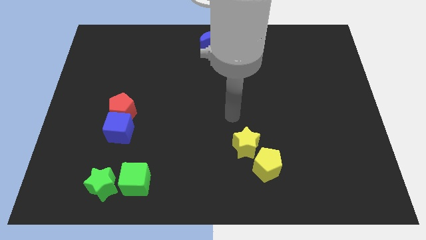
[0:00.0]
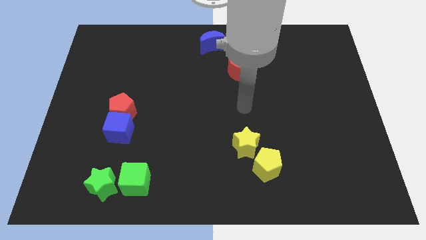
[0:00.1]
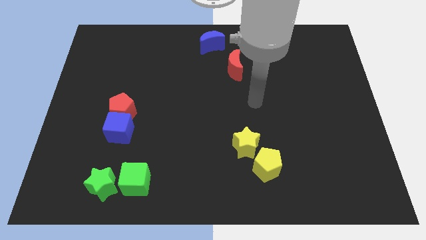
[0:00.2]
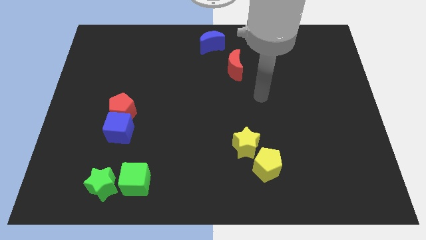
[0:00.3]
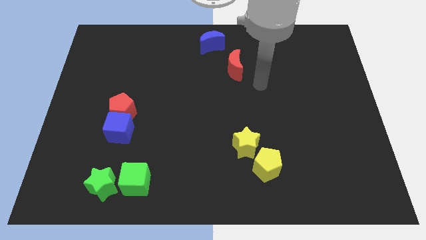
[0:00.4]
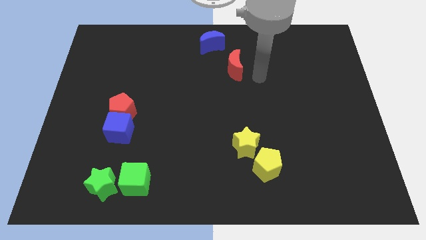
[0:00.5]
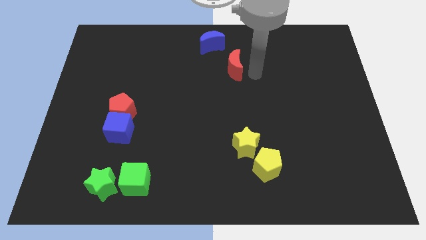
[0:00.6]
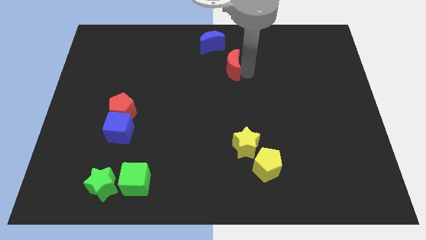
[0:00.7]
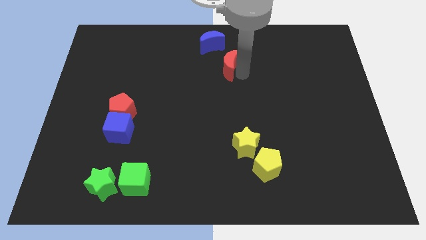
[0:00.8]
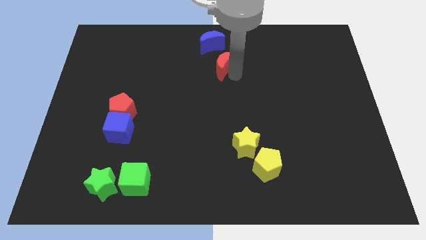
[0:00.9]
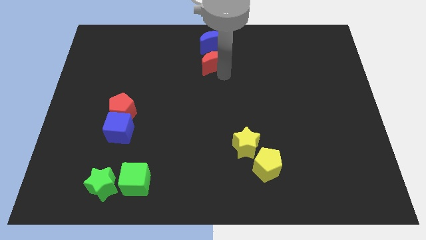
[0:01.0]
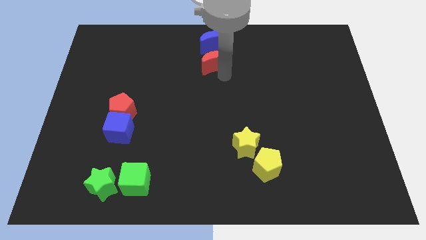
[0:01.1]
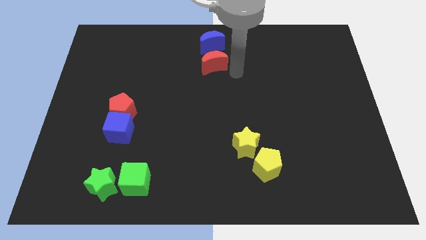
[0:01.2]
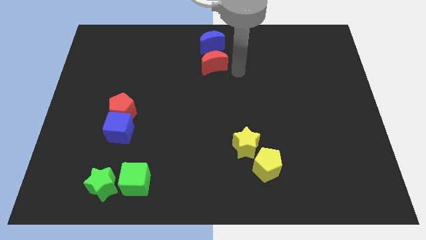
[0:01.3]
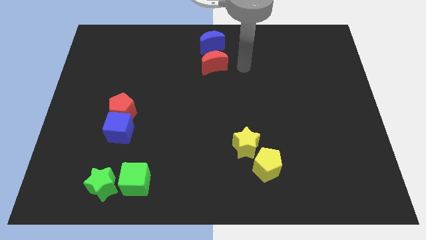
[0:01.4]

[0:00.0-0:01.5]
put the red crescent below the blue crescent

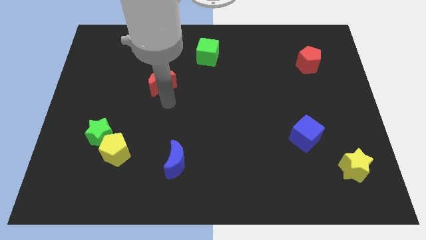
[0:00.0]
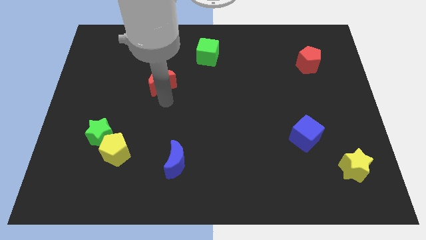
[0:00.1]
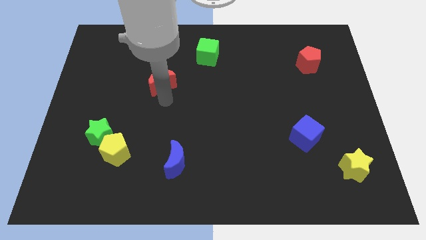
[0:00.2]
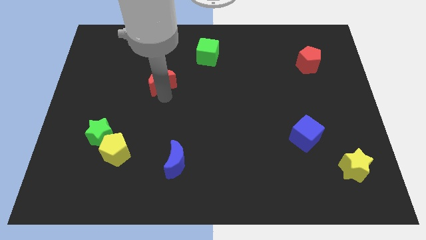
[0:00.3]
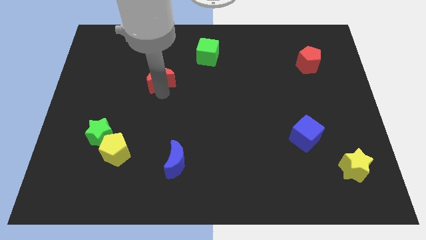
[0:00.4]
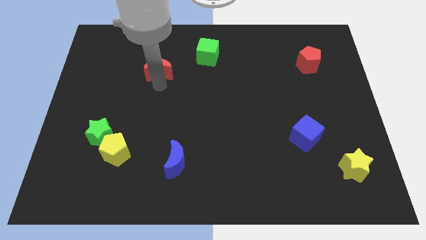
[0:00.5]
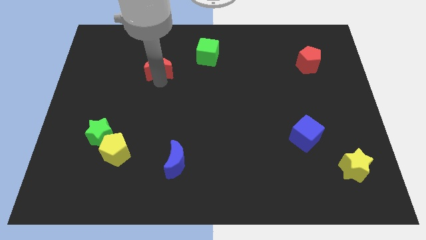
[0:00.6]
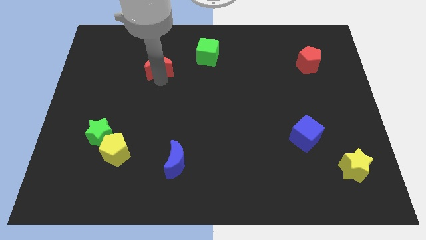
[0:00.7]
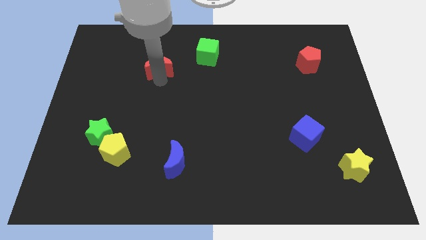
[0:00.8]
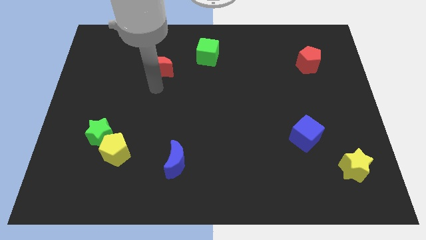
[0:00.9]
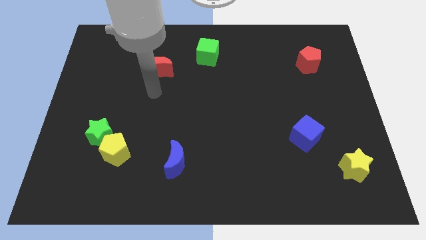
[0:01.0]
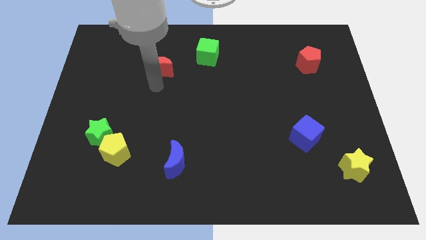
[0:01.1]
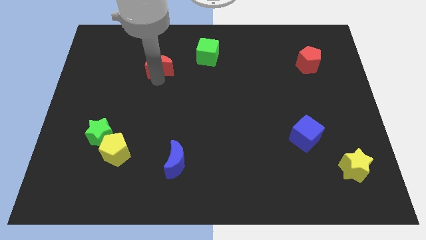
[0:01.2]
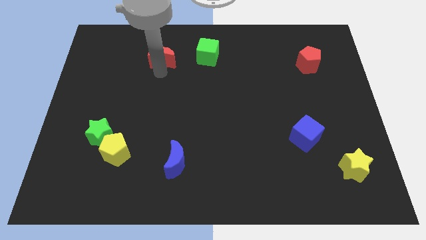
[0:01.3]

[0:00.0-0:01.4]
push the red crescent slightly towards up

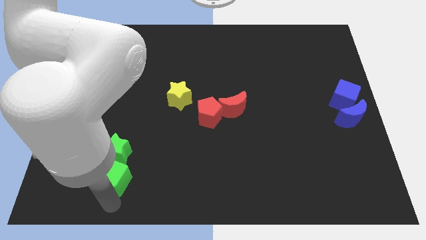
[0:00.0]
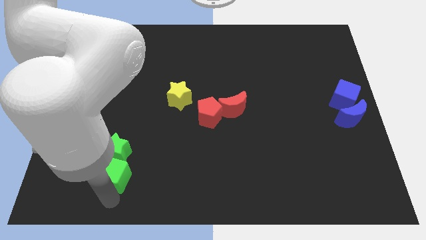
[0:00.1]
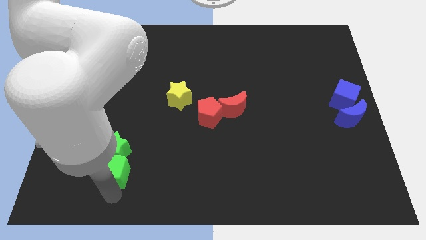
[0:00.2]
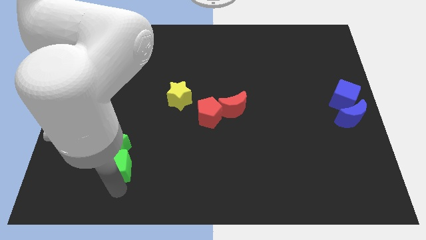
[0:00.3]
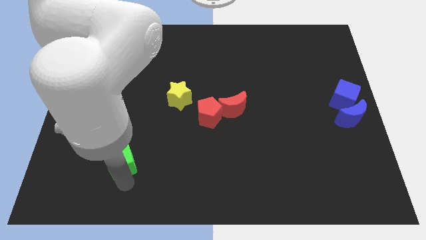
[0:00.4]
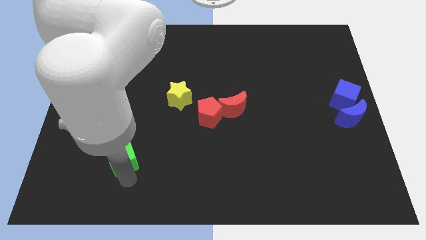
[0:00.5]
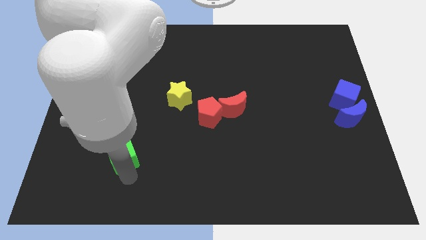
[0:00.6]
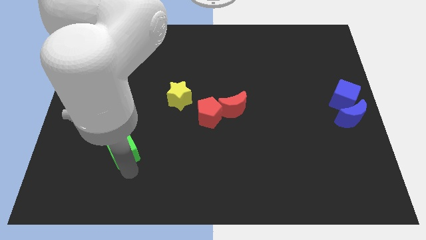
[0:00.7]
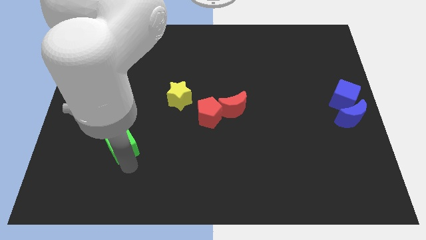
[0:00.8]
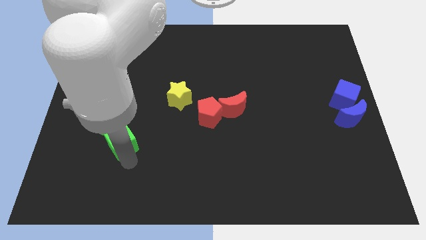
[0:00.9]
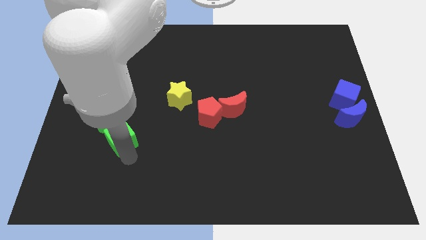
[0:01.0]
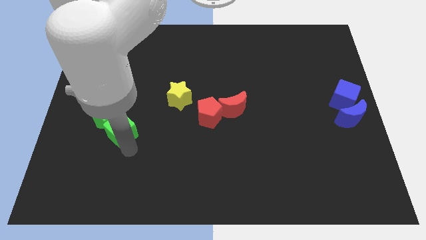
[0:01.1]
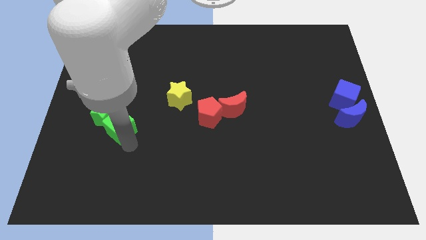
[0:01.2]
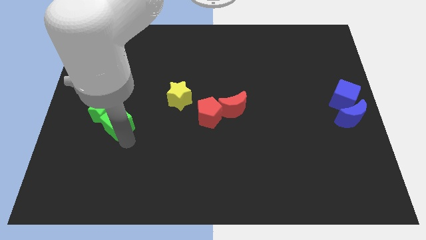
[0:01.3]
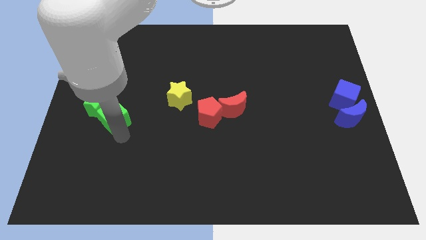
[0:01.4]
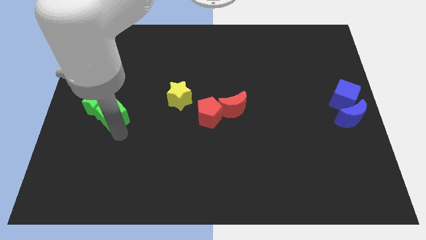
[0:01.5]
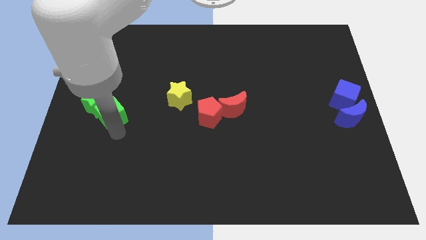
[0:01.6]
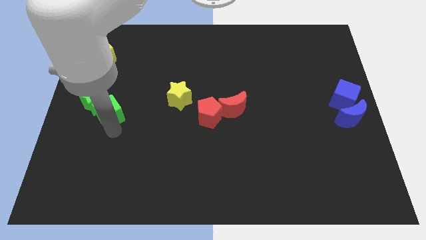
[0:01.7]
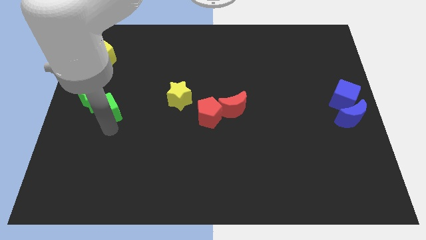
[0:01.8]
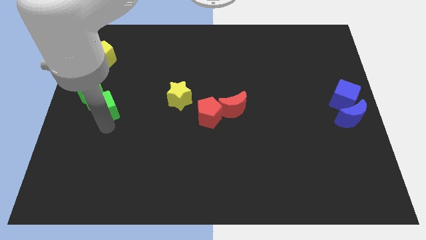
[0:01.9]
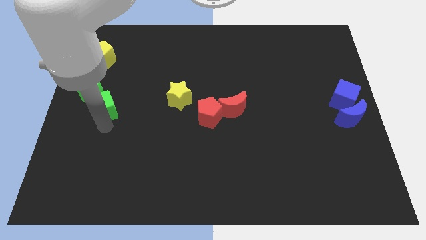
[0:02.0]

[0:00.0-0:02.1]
push the green cube into the green star

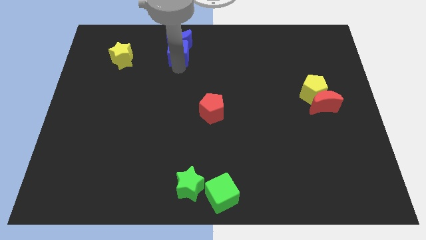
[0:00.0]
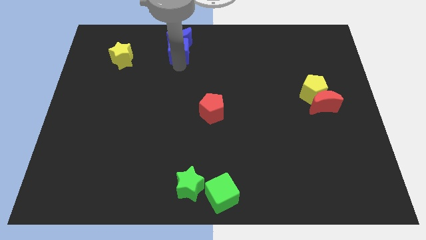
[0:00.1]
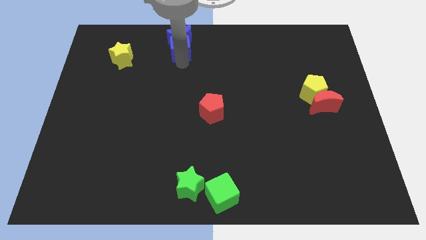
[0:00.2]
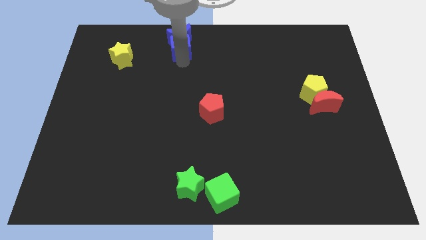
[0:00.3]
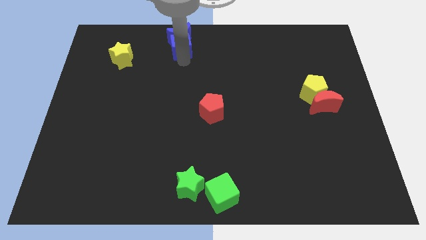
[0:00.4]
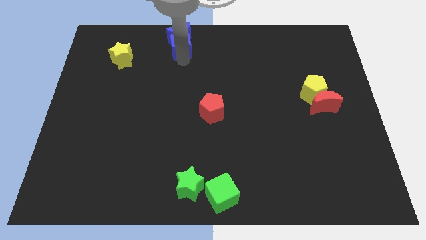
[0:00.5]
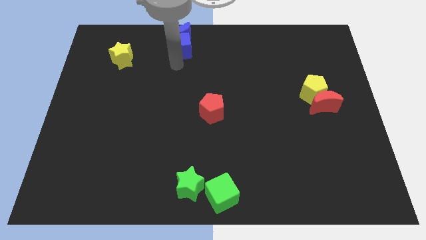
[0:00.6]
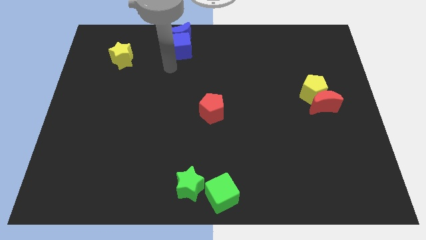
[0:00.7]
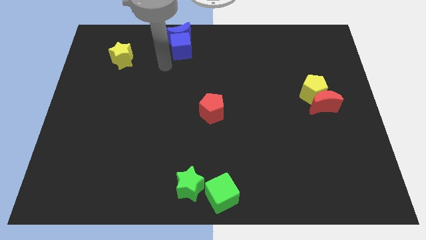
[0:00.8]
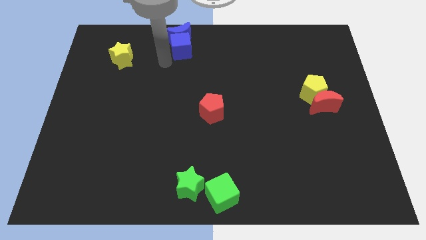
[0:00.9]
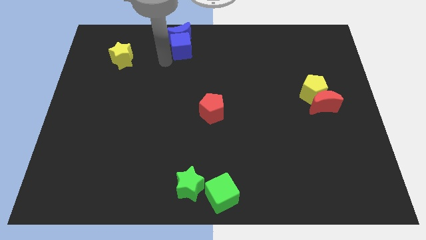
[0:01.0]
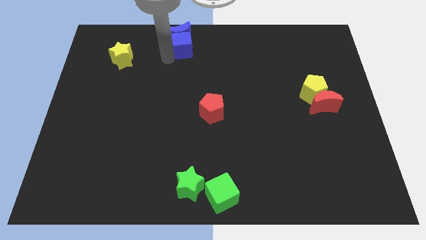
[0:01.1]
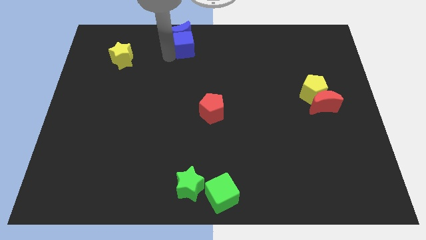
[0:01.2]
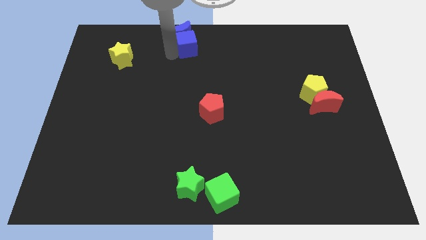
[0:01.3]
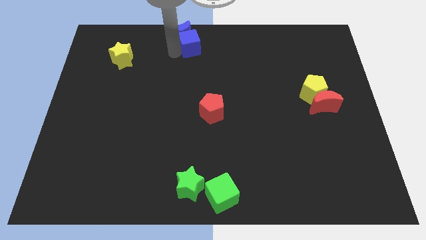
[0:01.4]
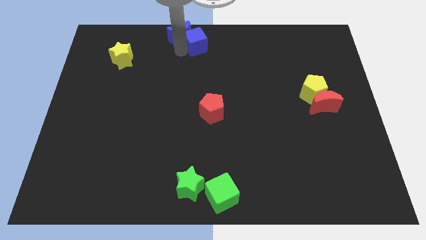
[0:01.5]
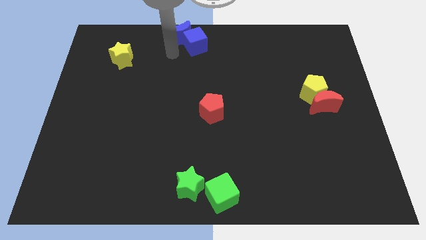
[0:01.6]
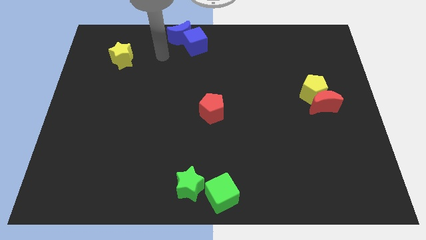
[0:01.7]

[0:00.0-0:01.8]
move the blue cube and the blue crescent towards the top center of the board

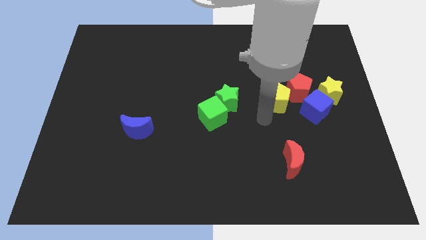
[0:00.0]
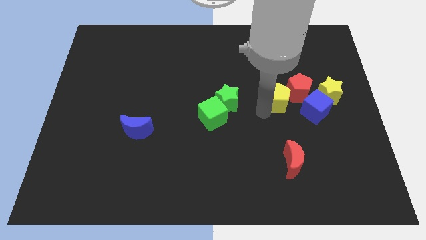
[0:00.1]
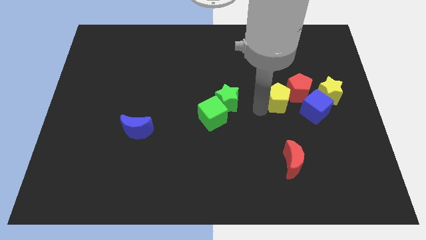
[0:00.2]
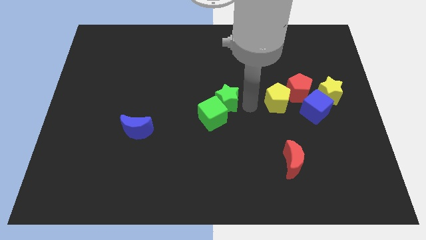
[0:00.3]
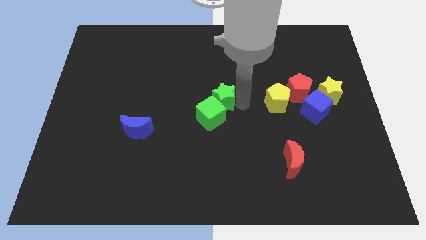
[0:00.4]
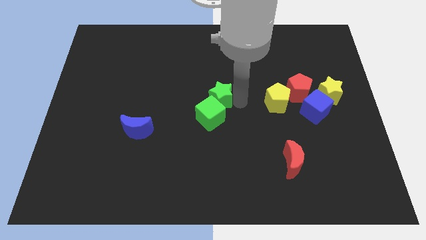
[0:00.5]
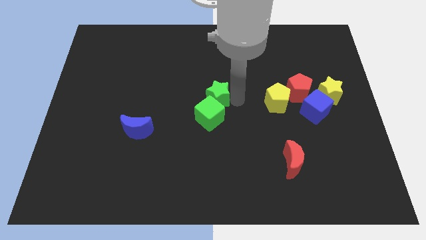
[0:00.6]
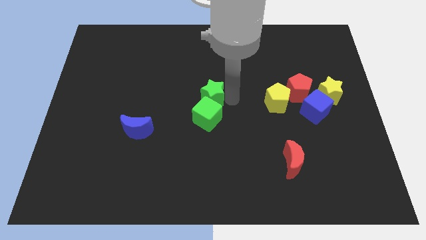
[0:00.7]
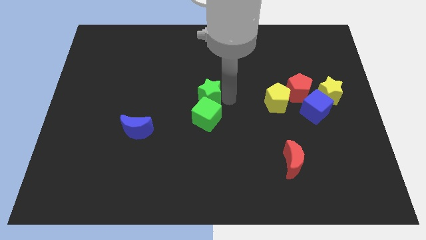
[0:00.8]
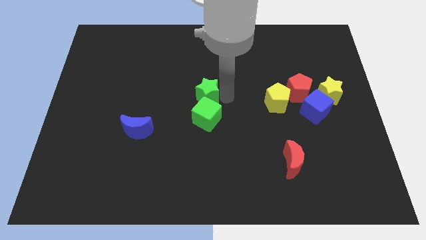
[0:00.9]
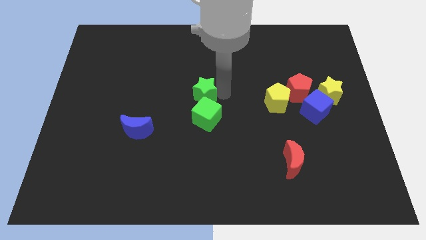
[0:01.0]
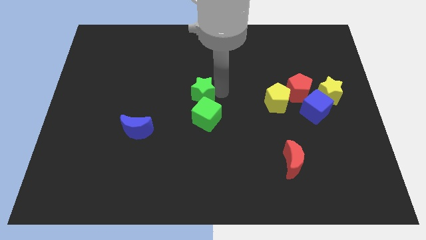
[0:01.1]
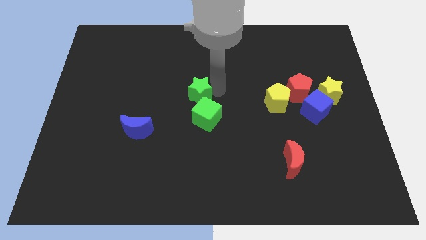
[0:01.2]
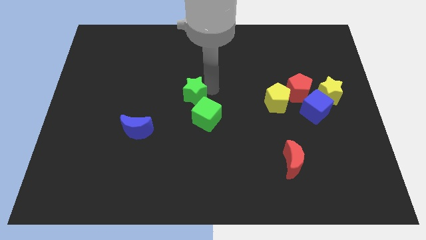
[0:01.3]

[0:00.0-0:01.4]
move the green star to the top of the green cube

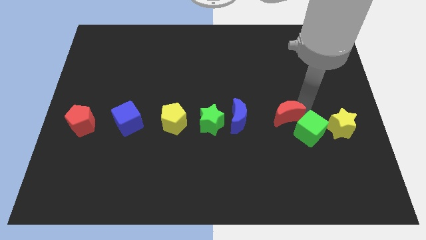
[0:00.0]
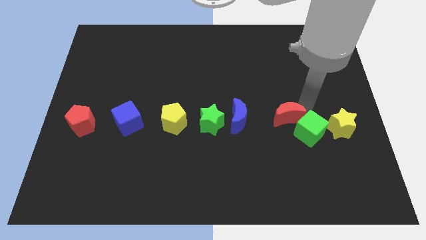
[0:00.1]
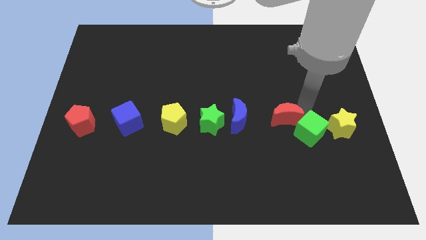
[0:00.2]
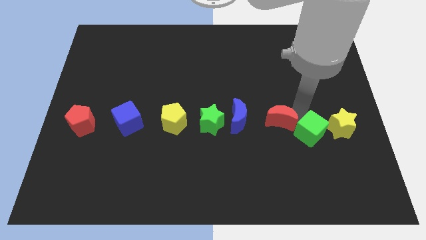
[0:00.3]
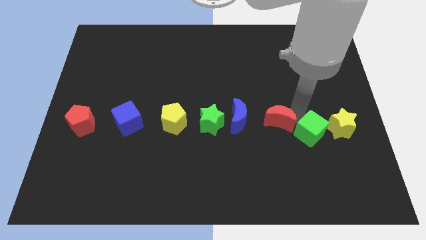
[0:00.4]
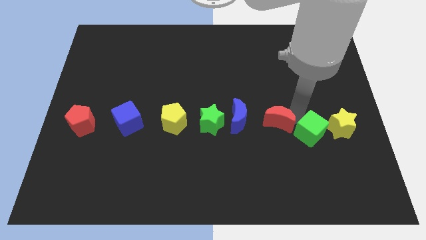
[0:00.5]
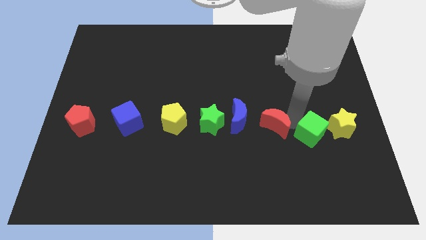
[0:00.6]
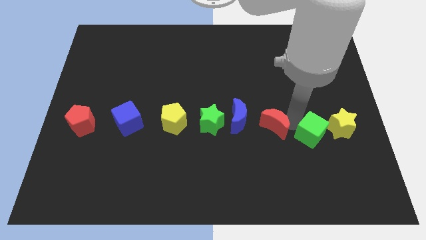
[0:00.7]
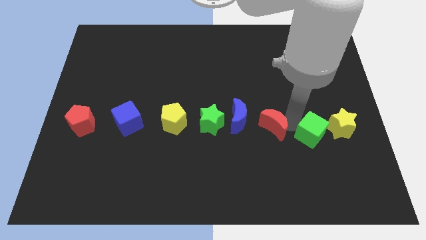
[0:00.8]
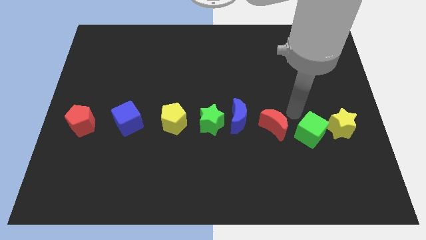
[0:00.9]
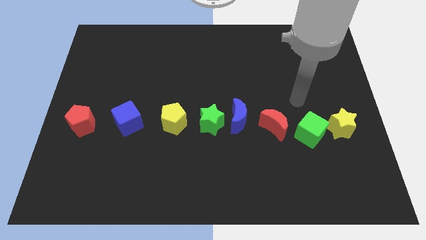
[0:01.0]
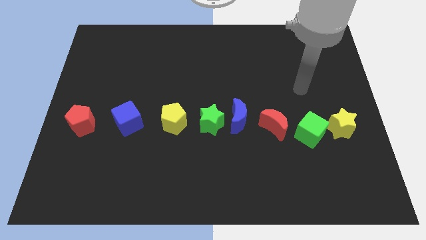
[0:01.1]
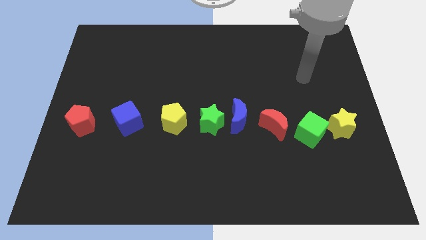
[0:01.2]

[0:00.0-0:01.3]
put the red crescent to the left side of the green cube
